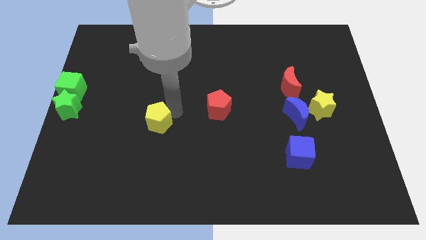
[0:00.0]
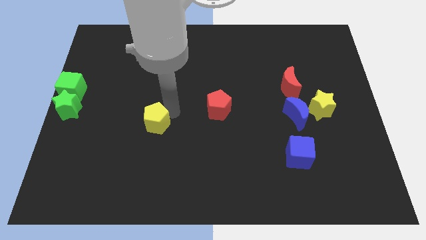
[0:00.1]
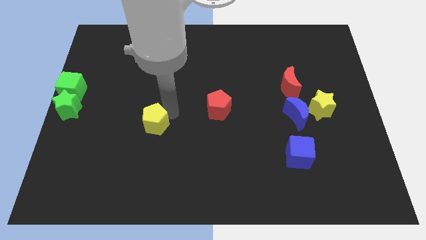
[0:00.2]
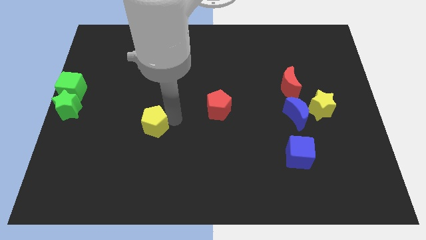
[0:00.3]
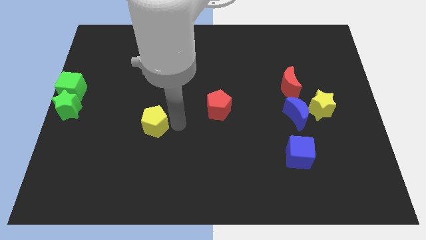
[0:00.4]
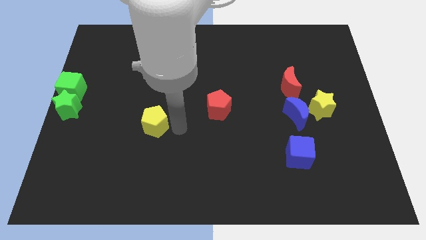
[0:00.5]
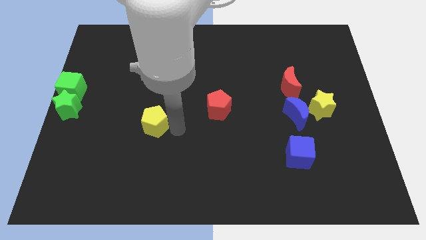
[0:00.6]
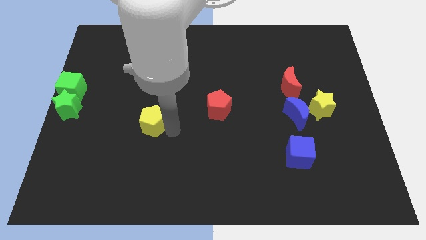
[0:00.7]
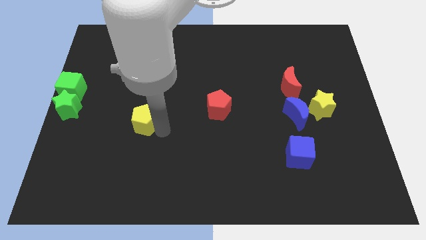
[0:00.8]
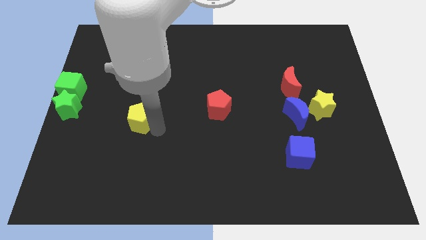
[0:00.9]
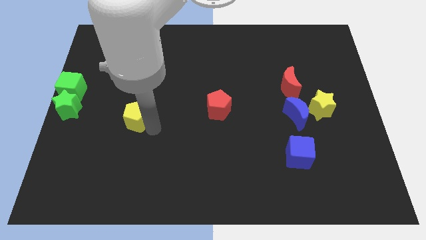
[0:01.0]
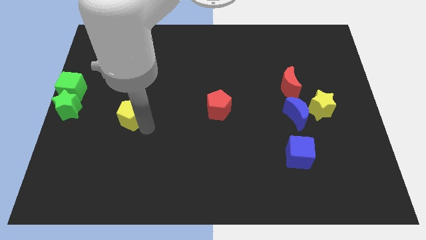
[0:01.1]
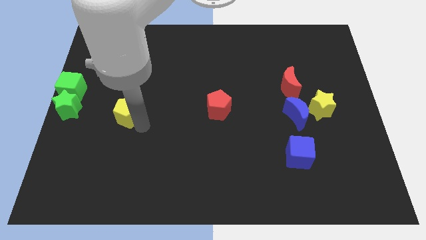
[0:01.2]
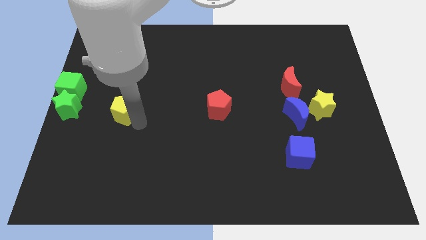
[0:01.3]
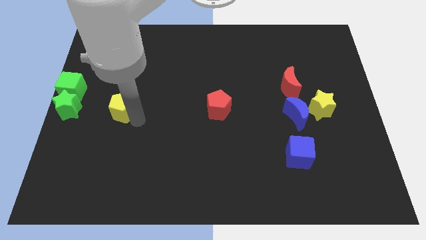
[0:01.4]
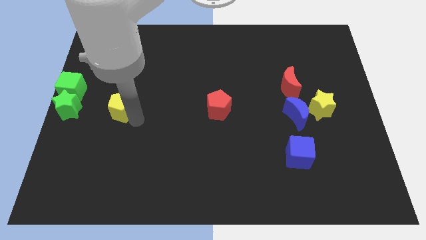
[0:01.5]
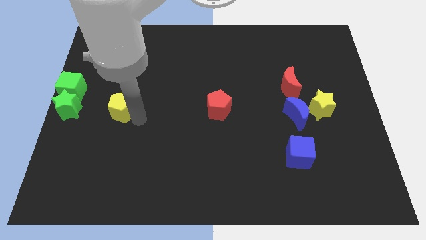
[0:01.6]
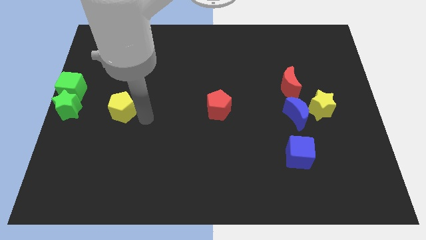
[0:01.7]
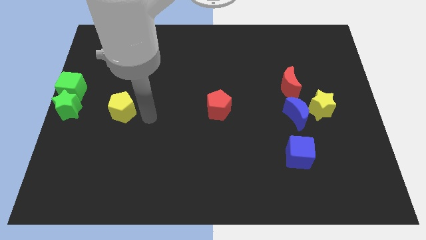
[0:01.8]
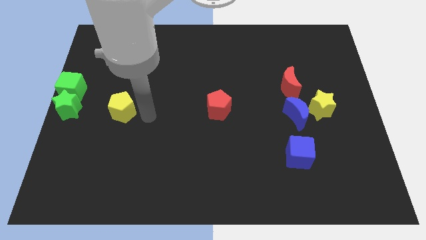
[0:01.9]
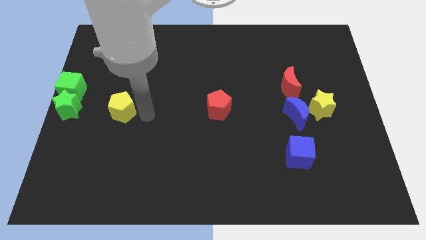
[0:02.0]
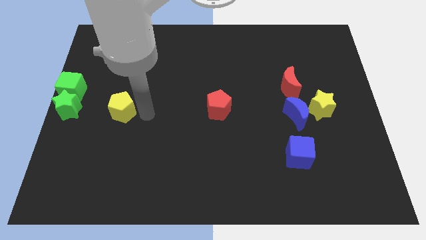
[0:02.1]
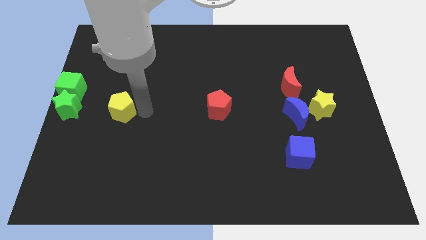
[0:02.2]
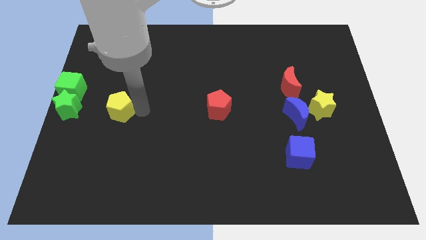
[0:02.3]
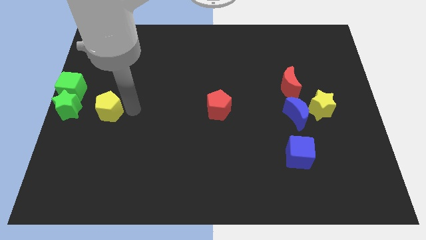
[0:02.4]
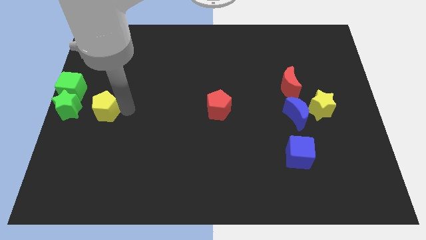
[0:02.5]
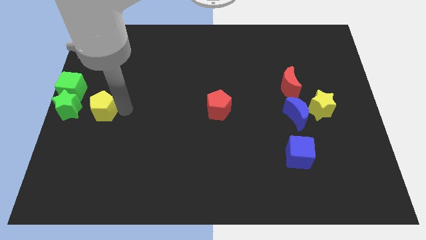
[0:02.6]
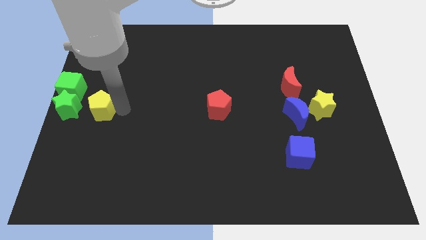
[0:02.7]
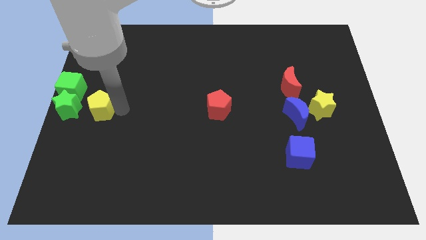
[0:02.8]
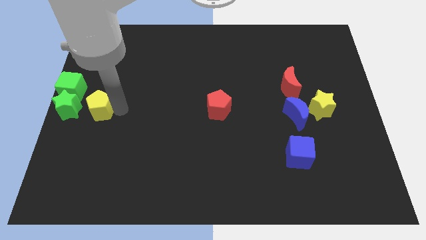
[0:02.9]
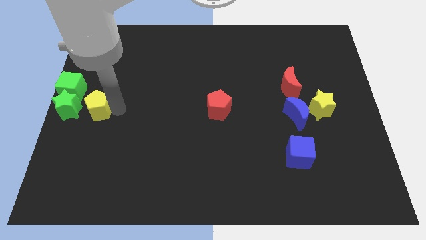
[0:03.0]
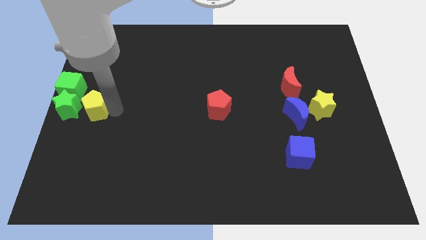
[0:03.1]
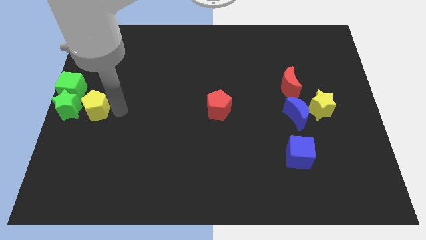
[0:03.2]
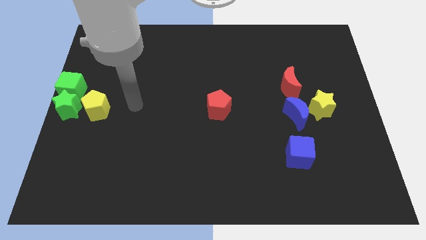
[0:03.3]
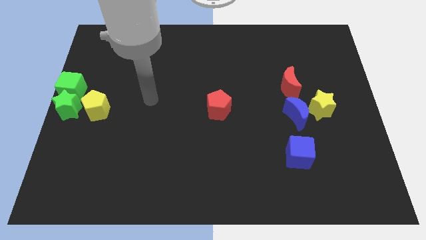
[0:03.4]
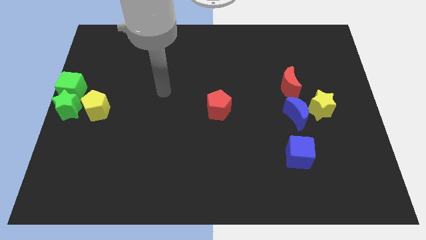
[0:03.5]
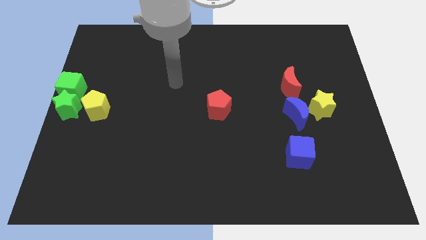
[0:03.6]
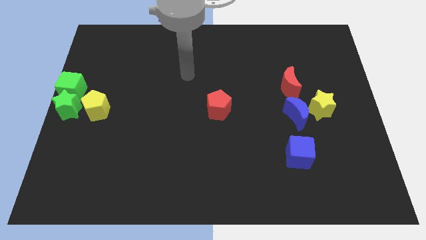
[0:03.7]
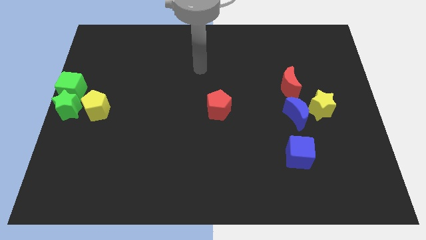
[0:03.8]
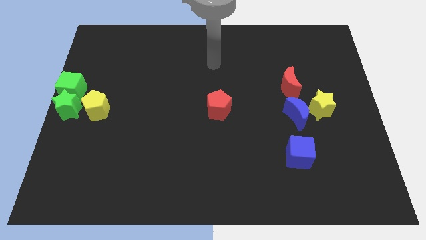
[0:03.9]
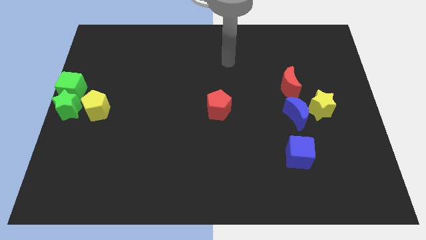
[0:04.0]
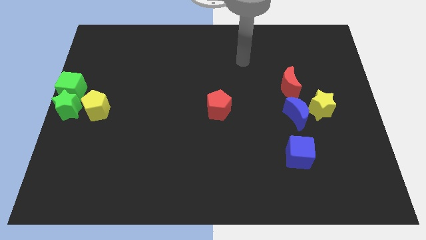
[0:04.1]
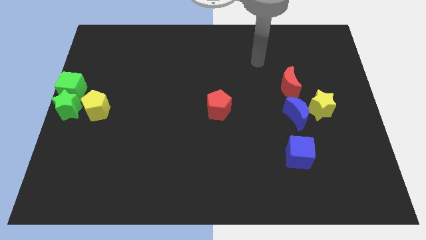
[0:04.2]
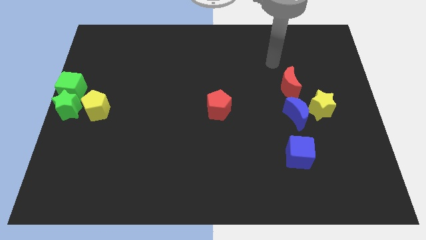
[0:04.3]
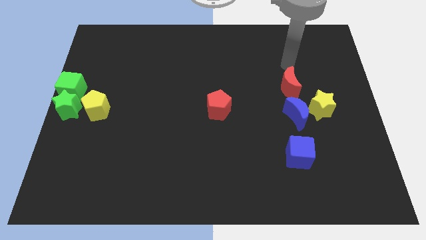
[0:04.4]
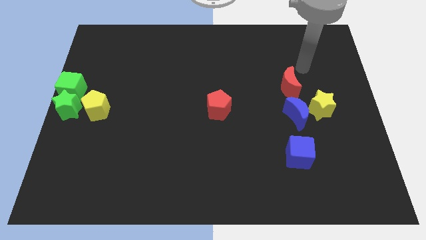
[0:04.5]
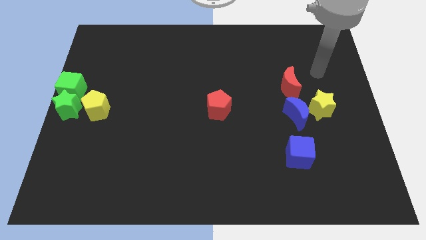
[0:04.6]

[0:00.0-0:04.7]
push the yellow pentagon to the right side of the green star

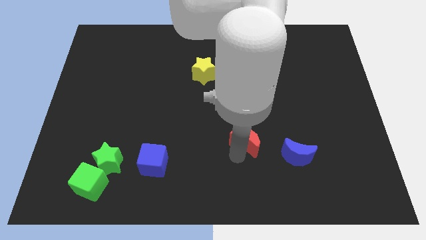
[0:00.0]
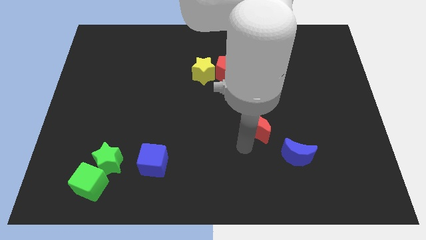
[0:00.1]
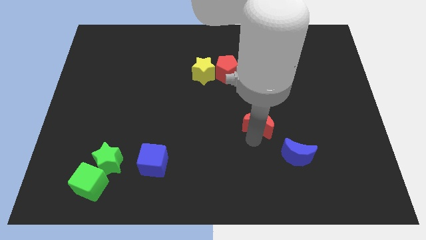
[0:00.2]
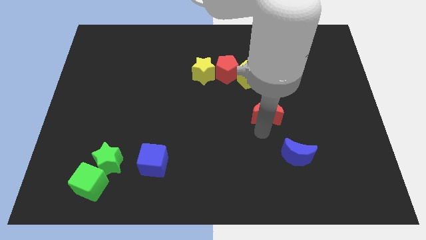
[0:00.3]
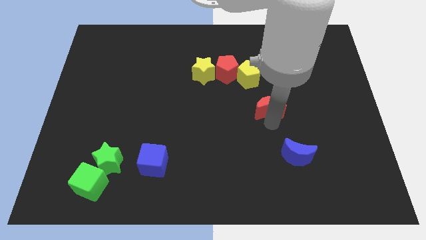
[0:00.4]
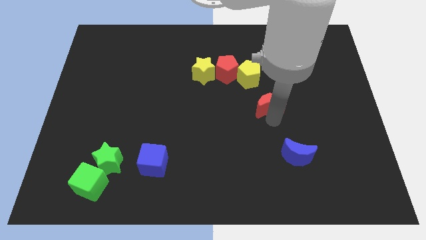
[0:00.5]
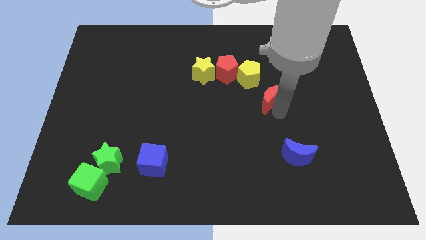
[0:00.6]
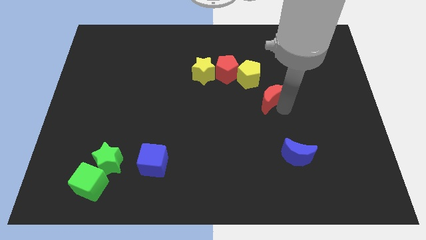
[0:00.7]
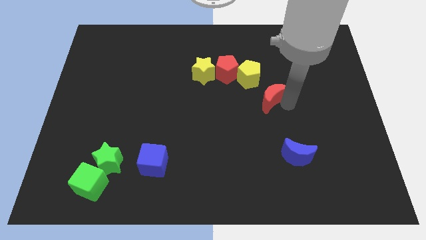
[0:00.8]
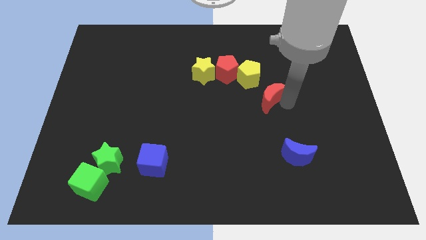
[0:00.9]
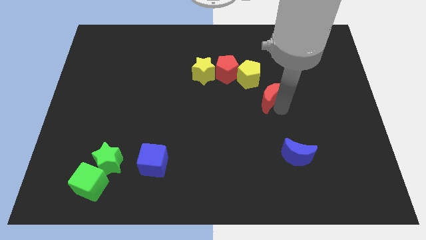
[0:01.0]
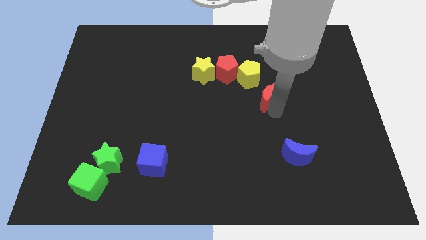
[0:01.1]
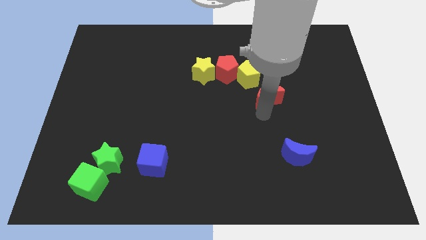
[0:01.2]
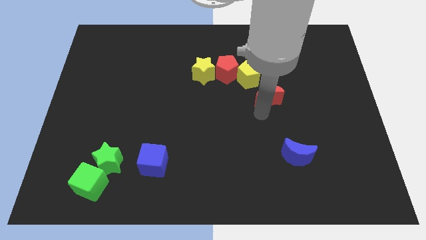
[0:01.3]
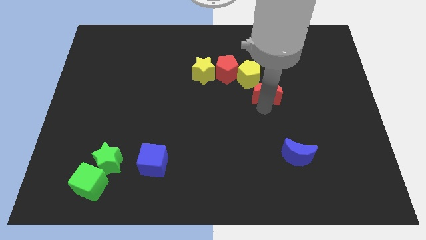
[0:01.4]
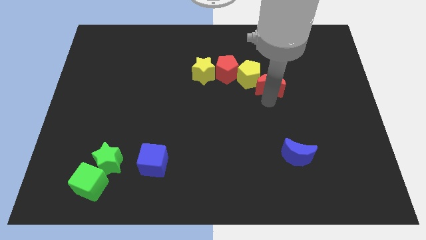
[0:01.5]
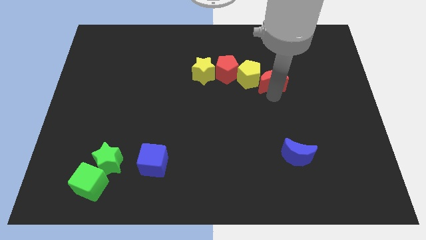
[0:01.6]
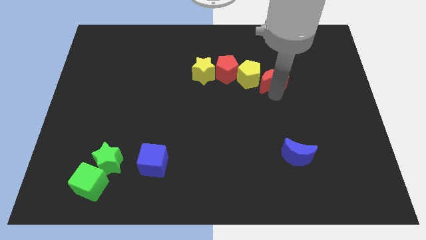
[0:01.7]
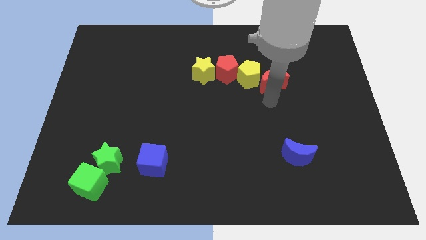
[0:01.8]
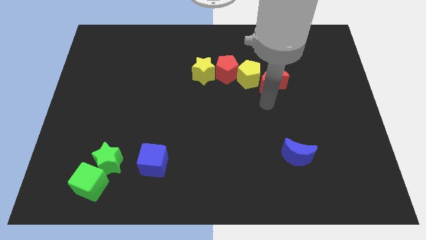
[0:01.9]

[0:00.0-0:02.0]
push the red crescent right beside the yellow pentagon

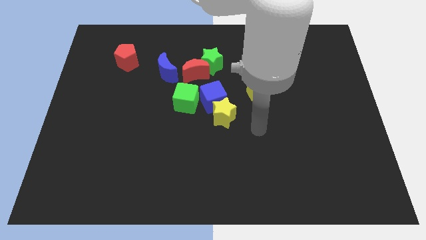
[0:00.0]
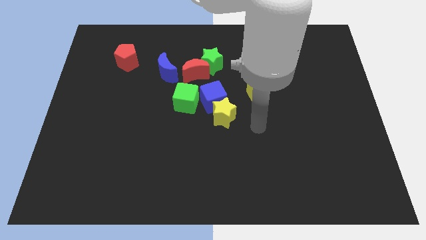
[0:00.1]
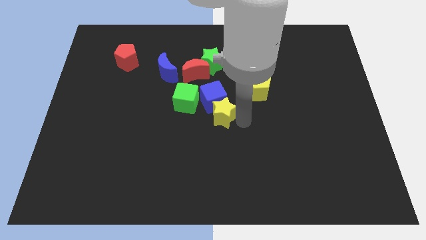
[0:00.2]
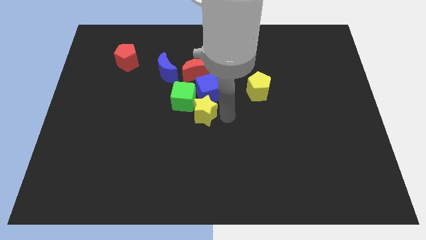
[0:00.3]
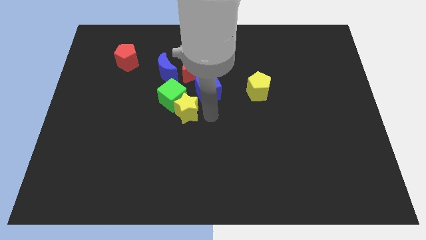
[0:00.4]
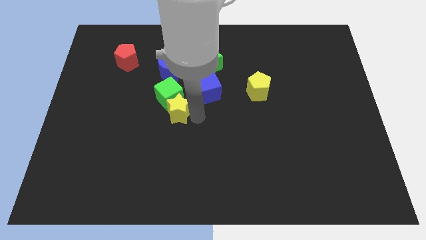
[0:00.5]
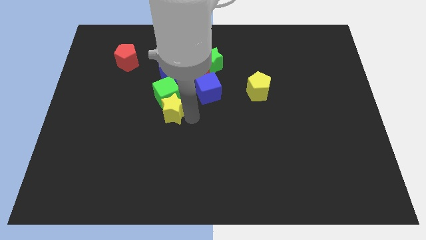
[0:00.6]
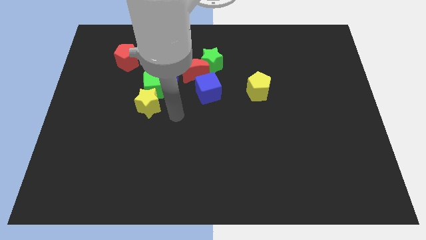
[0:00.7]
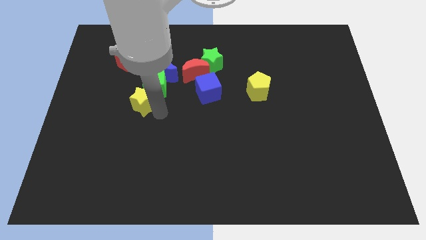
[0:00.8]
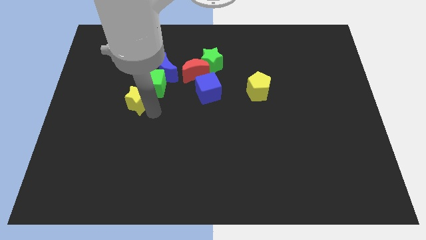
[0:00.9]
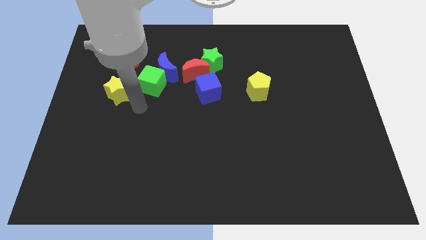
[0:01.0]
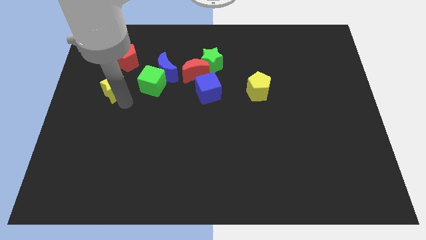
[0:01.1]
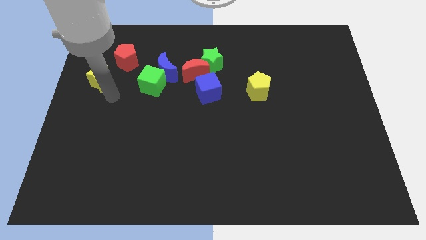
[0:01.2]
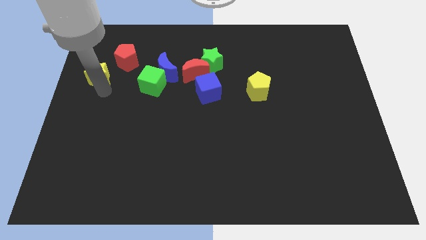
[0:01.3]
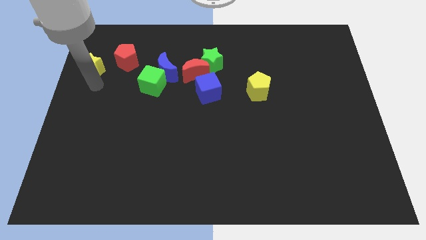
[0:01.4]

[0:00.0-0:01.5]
separate the green cube and the yellow star

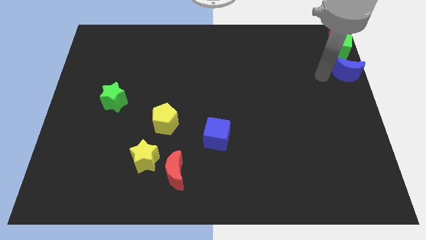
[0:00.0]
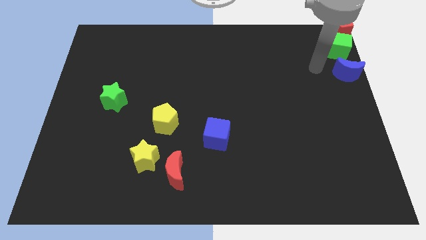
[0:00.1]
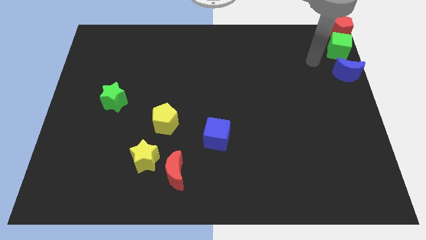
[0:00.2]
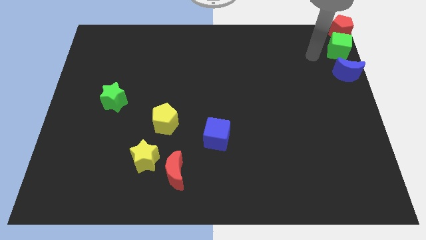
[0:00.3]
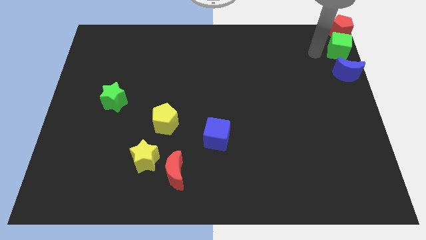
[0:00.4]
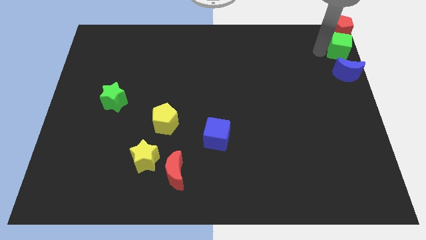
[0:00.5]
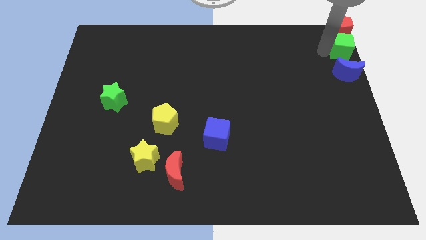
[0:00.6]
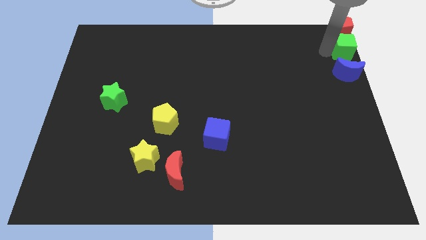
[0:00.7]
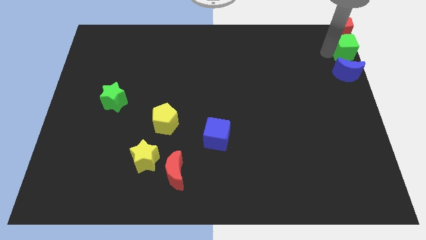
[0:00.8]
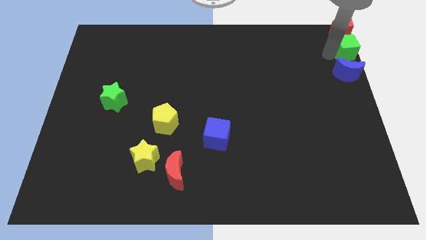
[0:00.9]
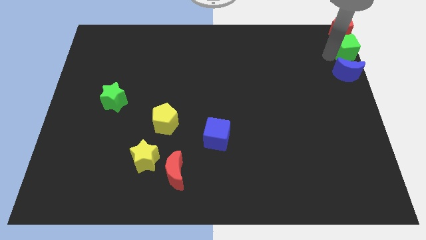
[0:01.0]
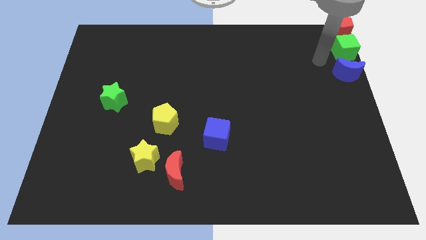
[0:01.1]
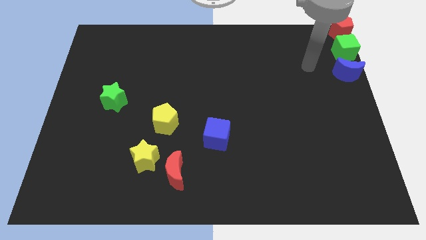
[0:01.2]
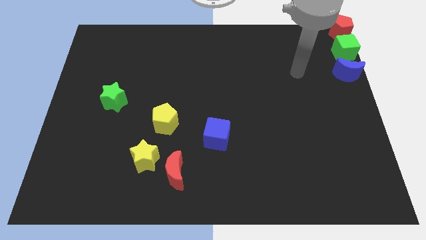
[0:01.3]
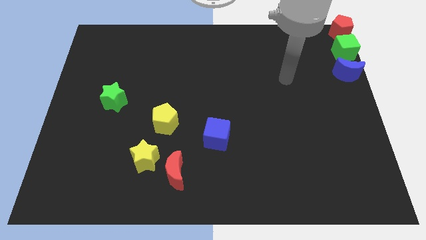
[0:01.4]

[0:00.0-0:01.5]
place the green cube vertically in between the red pentagon and blue crescent
